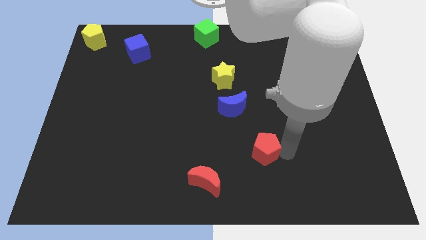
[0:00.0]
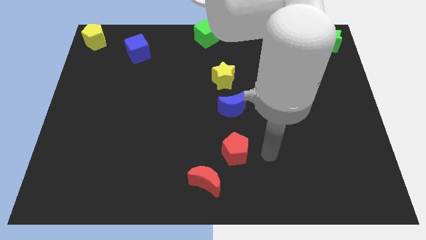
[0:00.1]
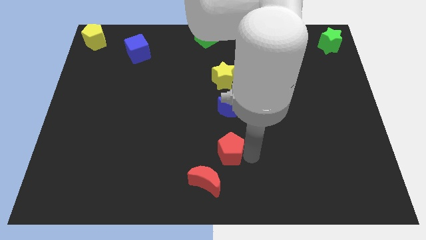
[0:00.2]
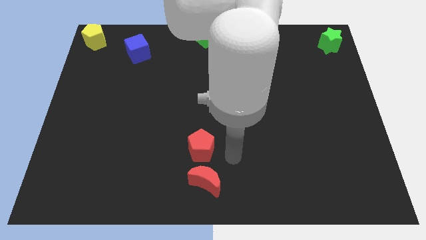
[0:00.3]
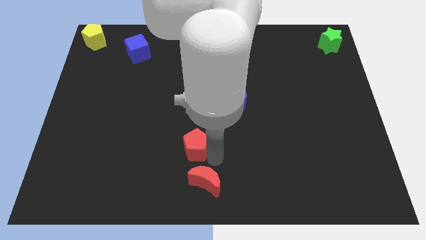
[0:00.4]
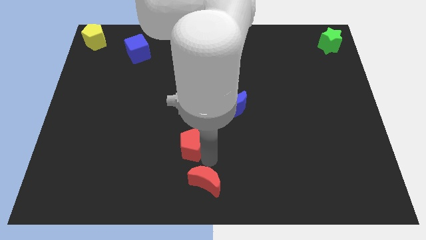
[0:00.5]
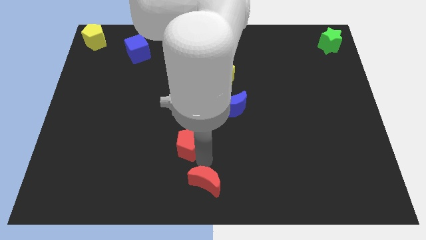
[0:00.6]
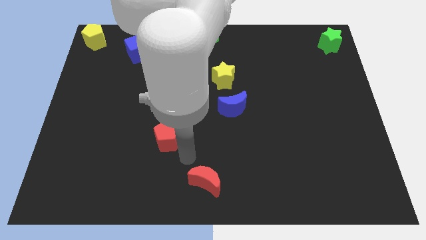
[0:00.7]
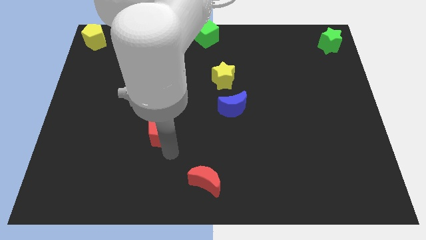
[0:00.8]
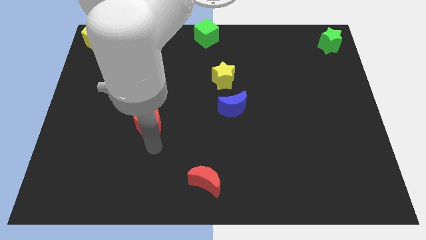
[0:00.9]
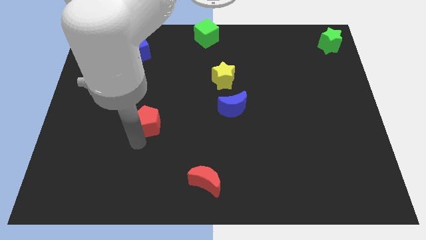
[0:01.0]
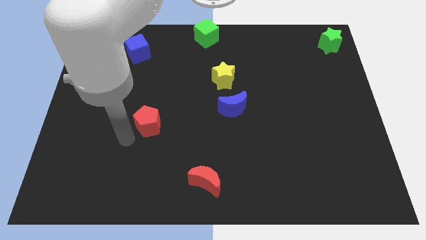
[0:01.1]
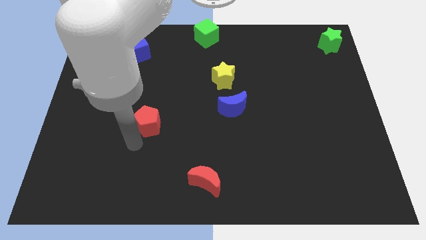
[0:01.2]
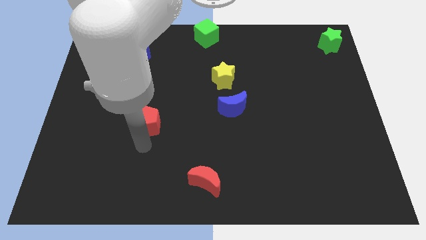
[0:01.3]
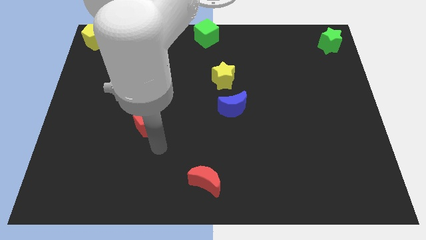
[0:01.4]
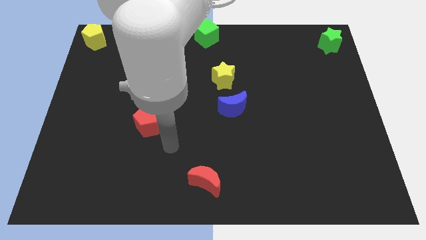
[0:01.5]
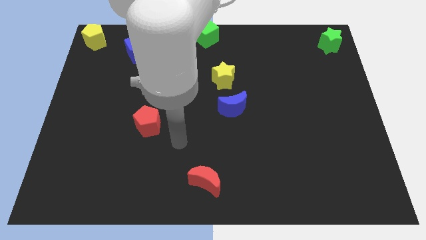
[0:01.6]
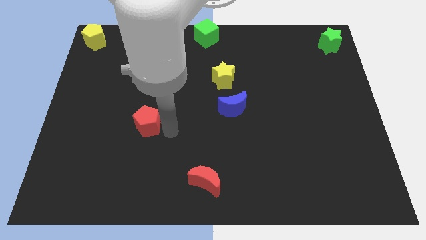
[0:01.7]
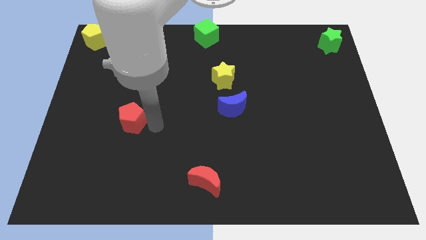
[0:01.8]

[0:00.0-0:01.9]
push the red pentagon to the left center of the board

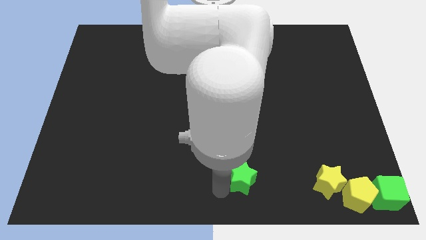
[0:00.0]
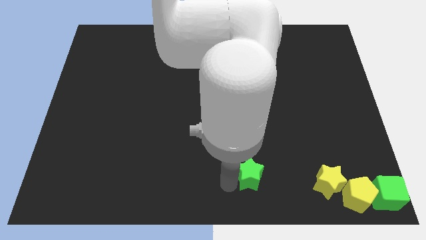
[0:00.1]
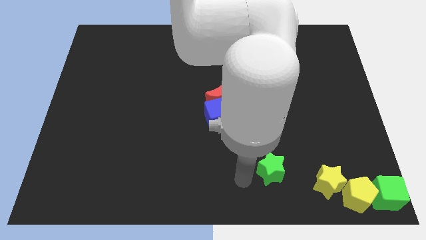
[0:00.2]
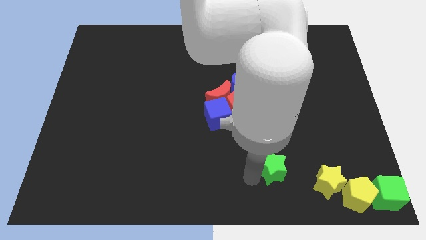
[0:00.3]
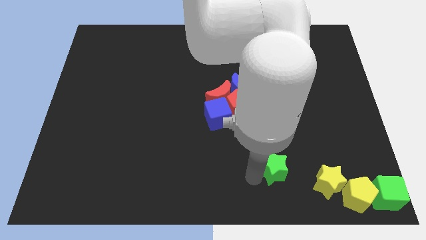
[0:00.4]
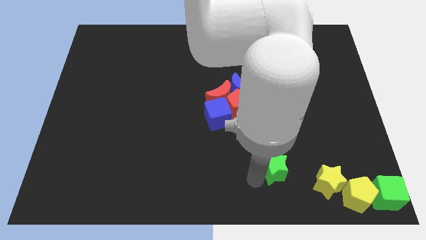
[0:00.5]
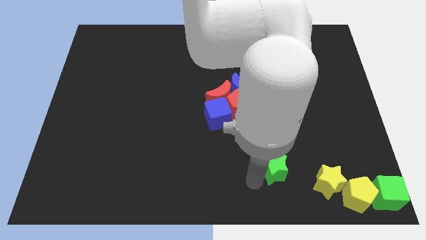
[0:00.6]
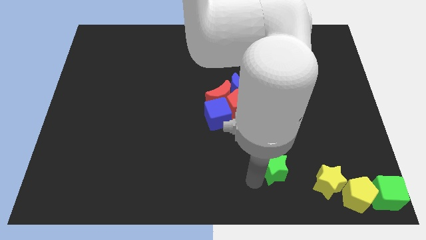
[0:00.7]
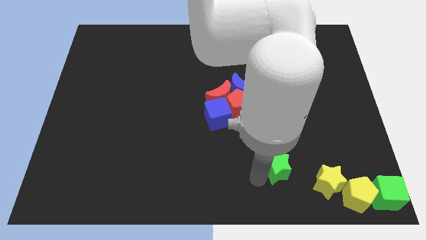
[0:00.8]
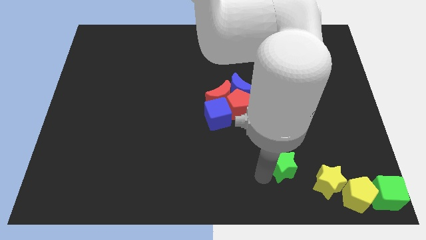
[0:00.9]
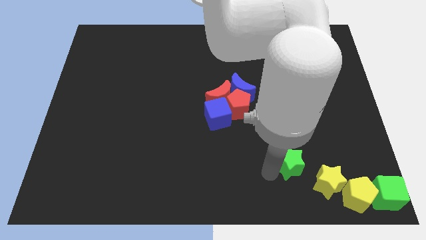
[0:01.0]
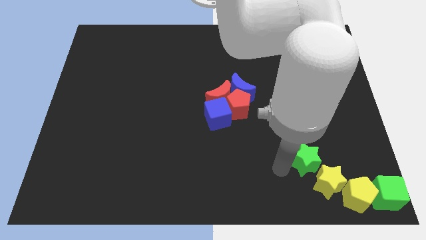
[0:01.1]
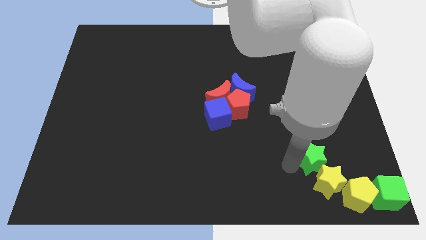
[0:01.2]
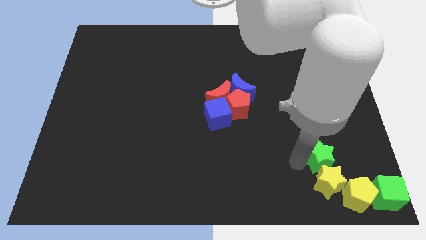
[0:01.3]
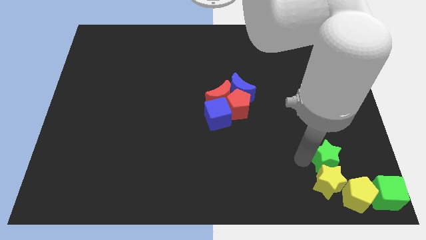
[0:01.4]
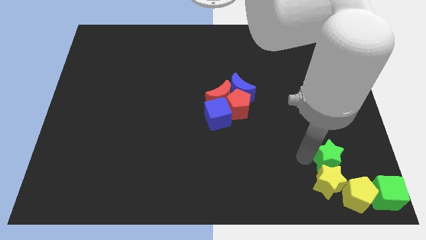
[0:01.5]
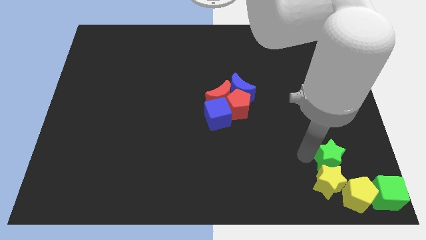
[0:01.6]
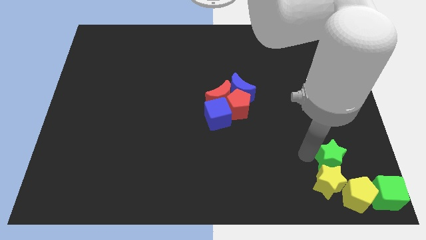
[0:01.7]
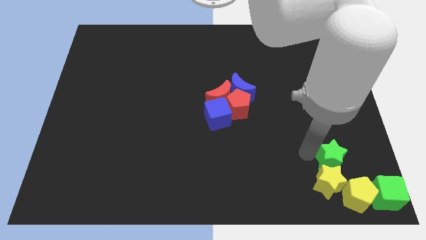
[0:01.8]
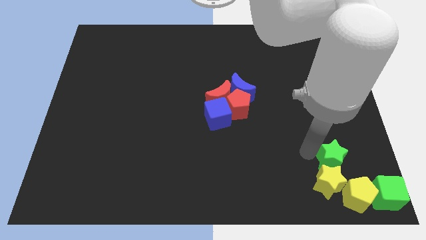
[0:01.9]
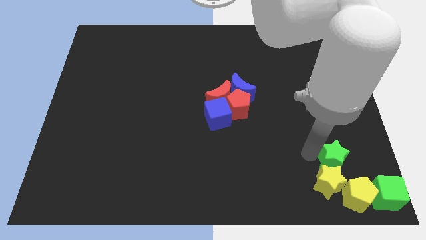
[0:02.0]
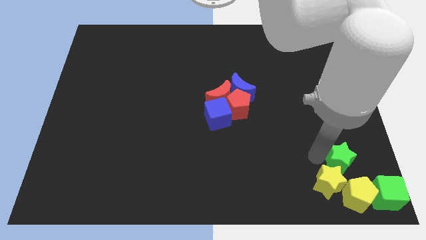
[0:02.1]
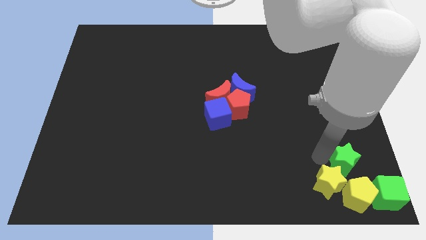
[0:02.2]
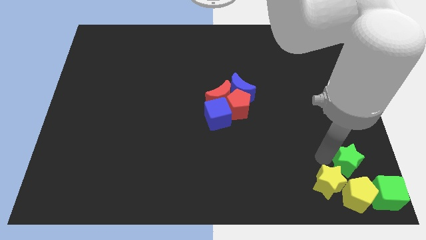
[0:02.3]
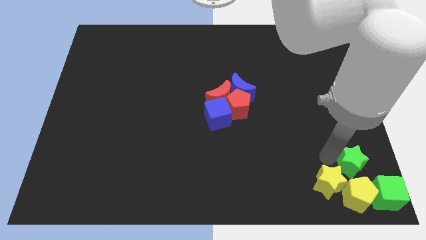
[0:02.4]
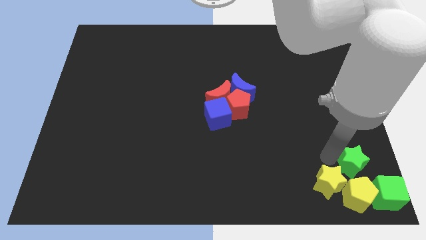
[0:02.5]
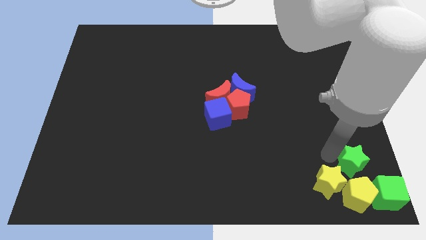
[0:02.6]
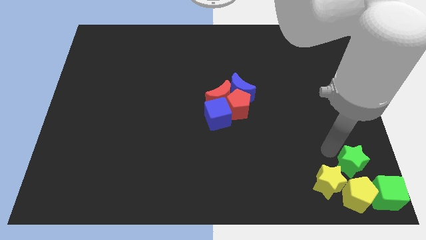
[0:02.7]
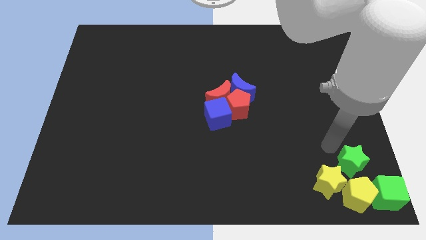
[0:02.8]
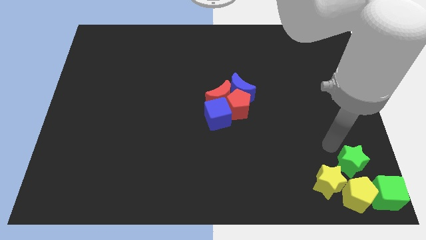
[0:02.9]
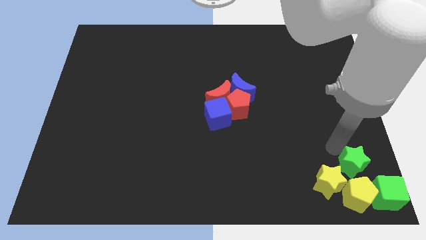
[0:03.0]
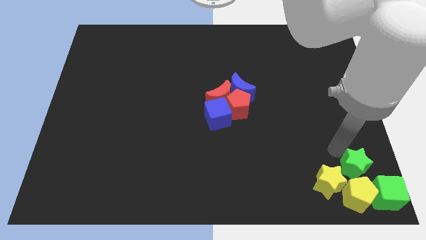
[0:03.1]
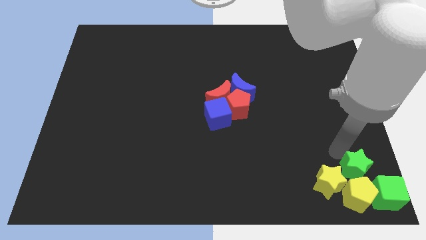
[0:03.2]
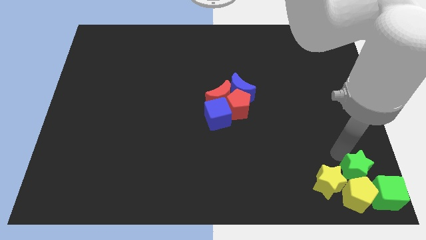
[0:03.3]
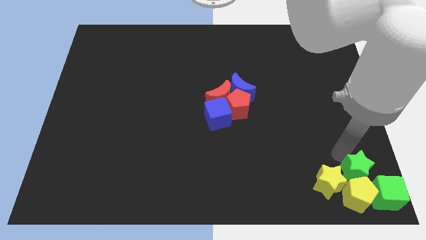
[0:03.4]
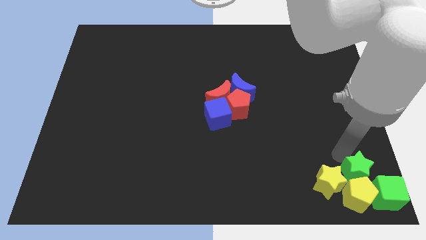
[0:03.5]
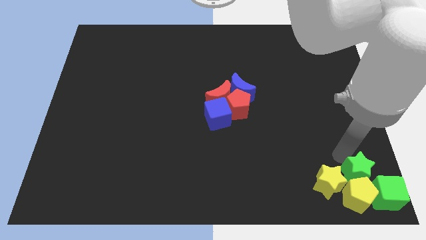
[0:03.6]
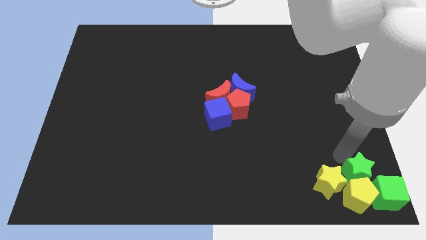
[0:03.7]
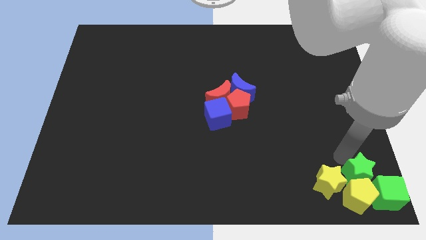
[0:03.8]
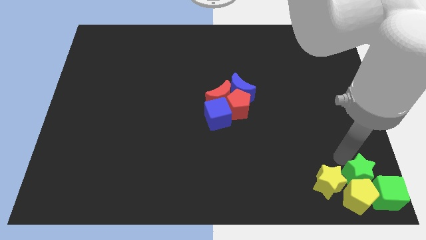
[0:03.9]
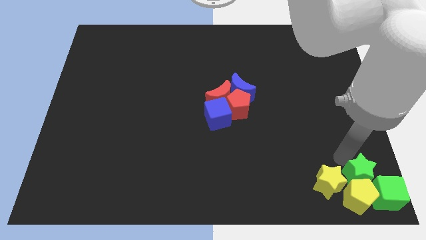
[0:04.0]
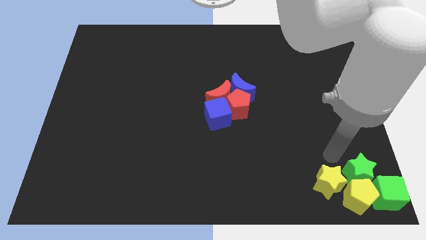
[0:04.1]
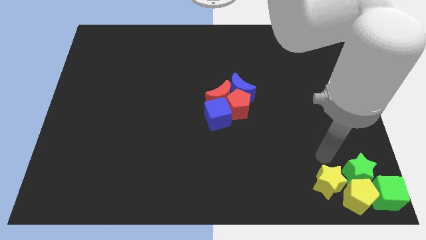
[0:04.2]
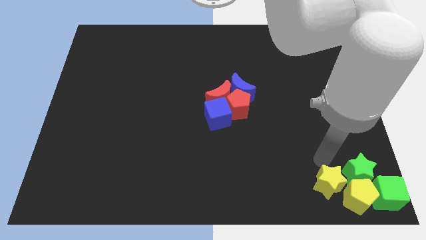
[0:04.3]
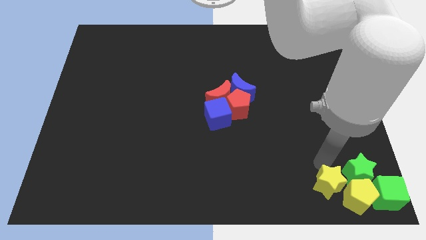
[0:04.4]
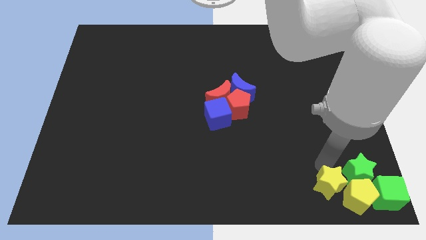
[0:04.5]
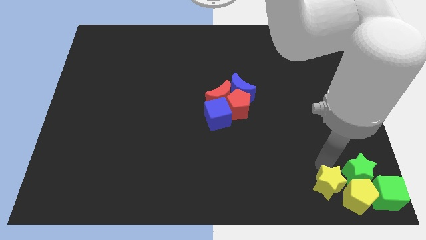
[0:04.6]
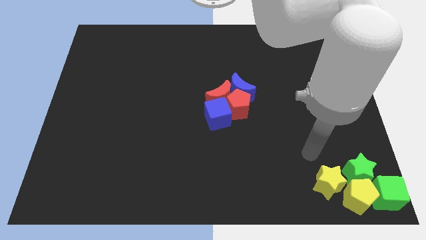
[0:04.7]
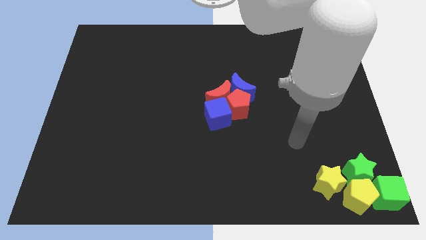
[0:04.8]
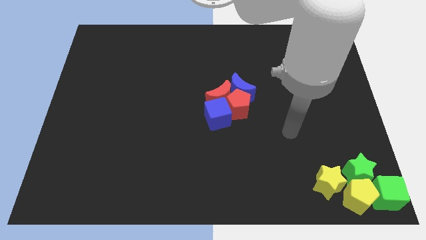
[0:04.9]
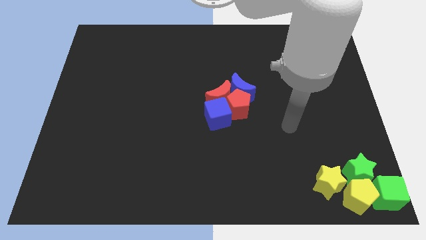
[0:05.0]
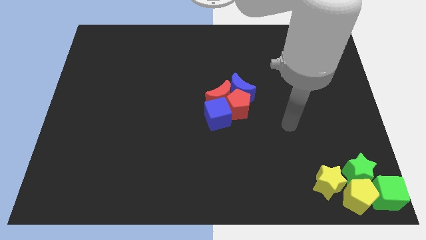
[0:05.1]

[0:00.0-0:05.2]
place the green star above the yellow pentagon

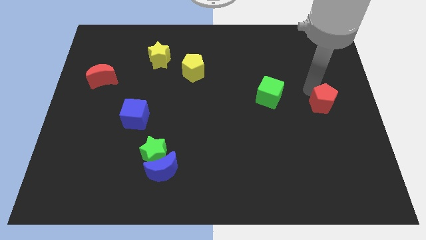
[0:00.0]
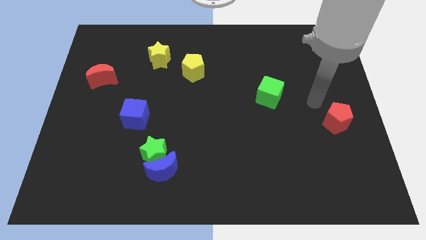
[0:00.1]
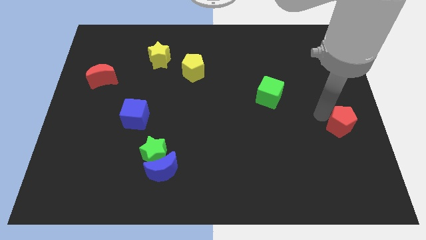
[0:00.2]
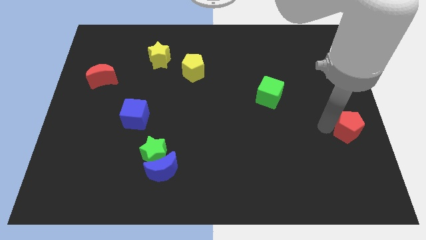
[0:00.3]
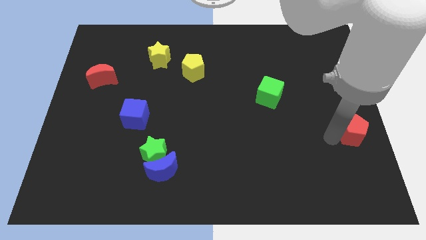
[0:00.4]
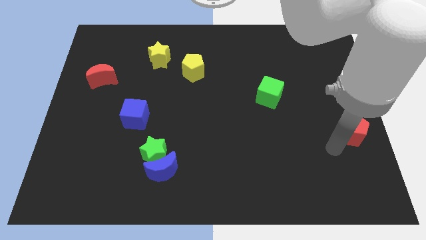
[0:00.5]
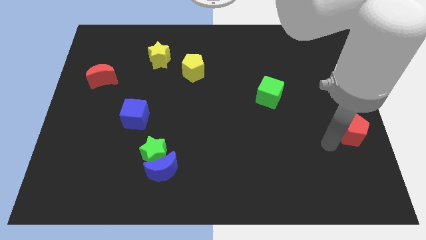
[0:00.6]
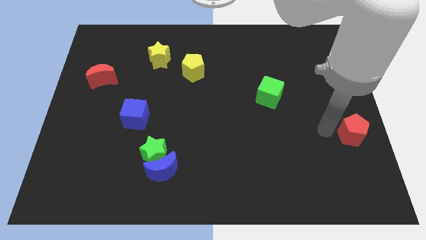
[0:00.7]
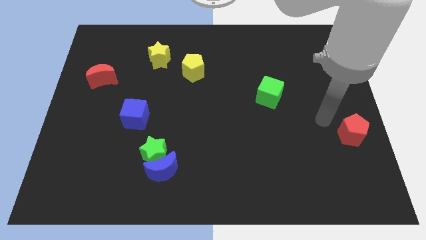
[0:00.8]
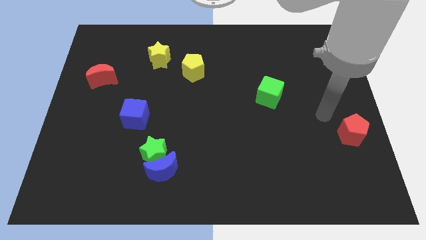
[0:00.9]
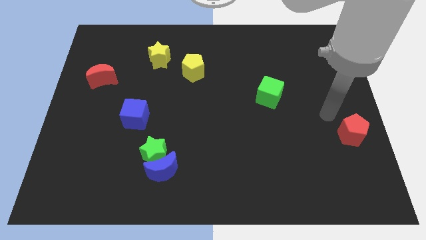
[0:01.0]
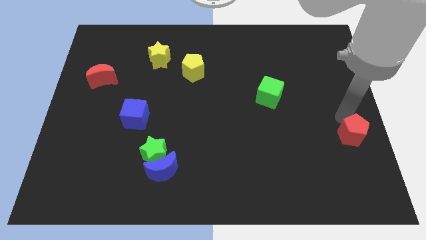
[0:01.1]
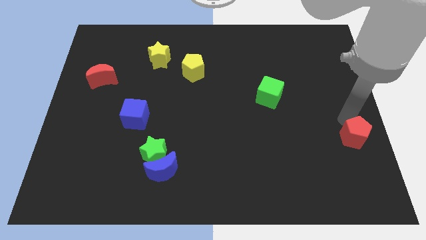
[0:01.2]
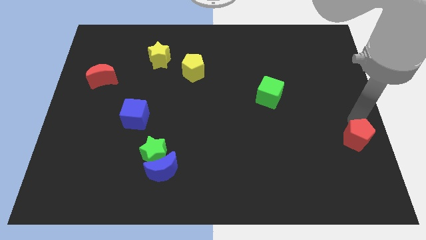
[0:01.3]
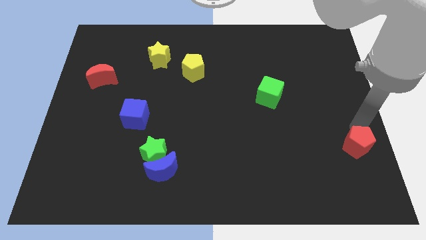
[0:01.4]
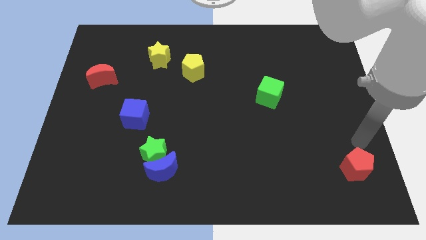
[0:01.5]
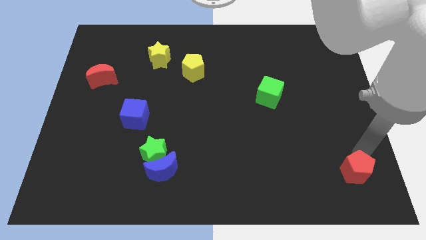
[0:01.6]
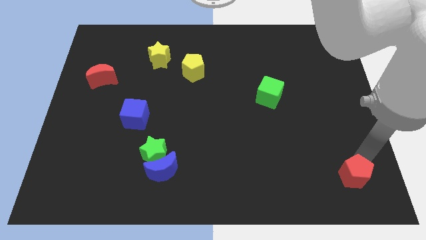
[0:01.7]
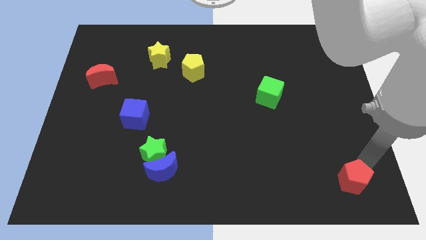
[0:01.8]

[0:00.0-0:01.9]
move the red pentagon downwards to the bottom right of the board

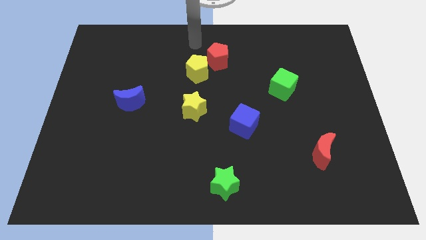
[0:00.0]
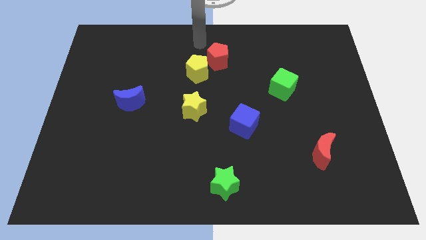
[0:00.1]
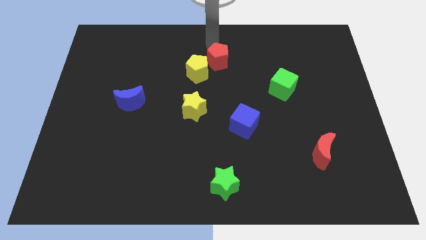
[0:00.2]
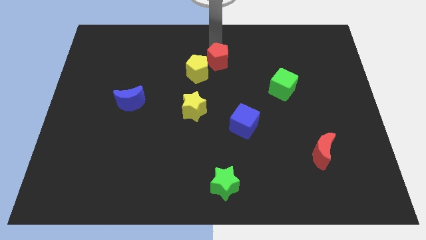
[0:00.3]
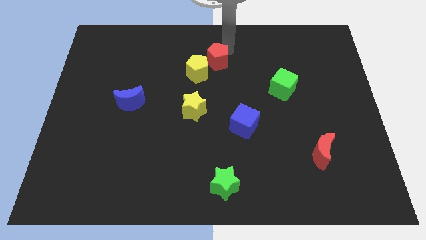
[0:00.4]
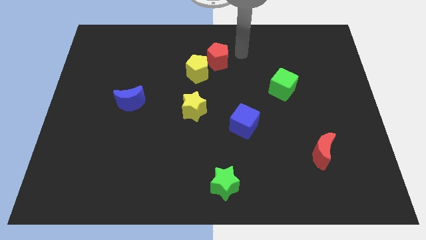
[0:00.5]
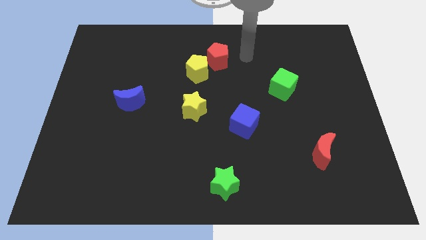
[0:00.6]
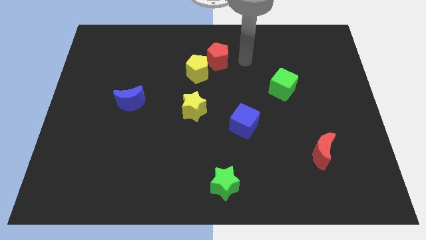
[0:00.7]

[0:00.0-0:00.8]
place your arm at the right of the red pentagon
